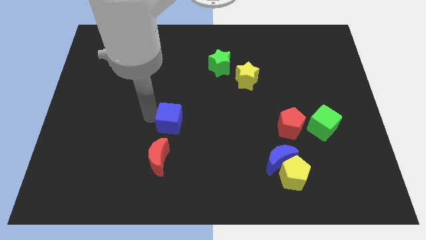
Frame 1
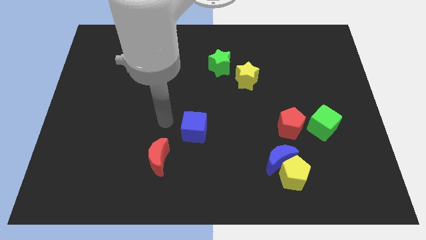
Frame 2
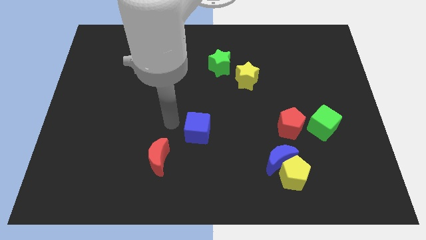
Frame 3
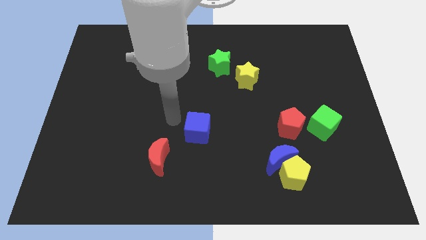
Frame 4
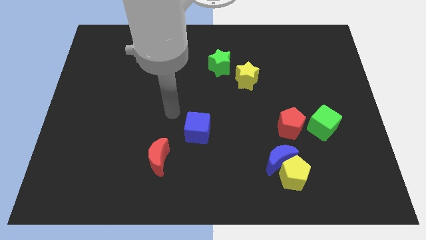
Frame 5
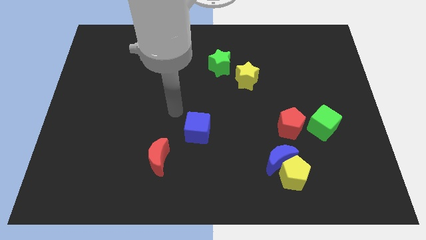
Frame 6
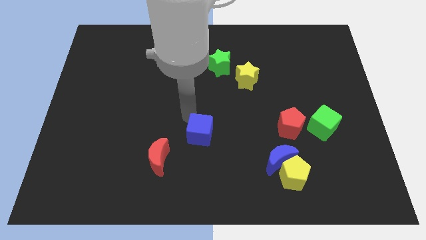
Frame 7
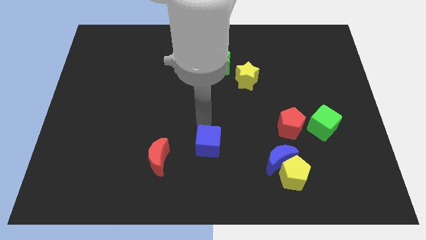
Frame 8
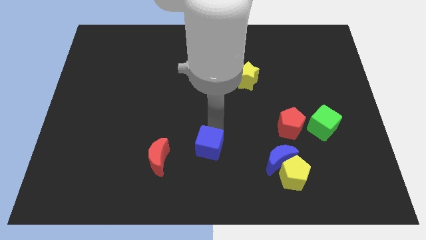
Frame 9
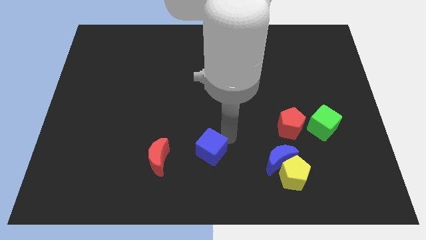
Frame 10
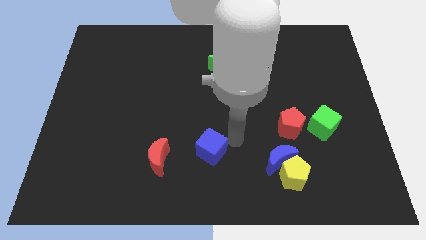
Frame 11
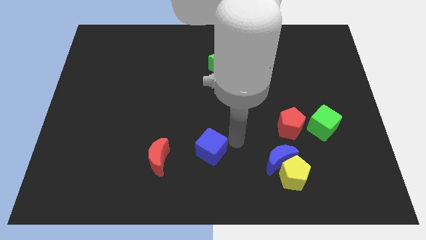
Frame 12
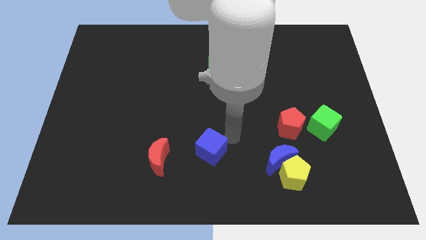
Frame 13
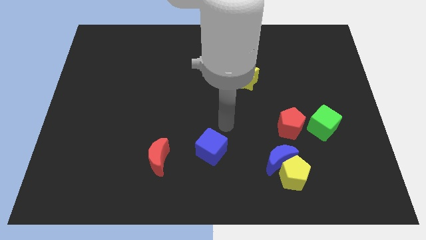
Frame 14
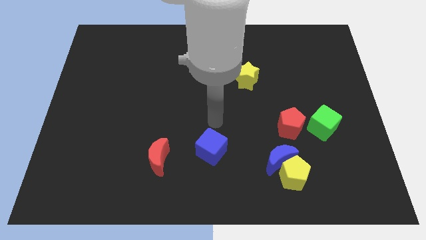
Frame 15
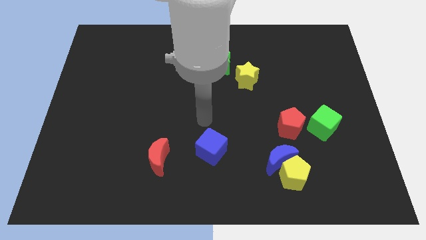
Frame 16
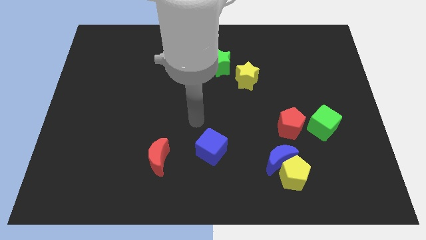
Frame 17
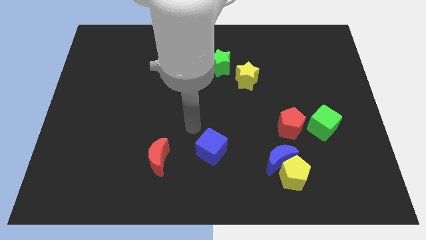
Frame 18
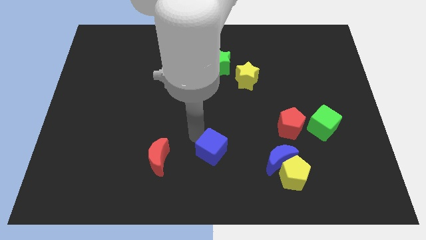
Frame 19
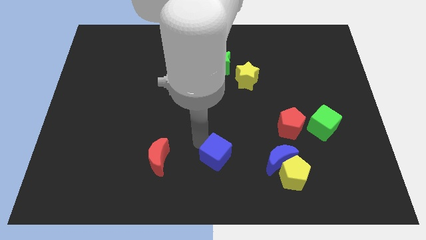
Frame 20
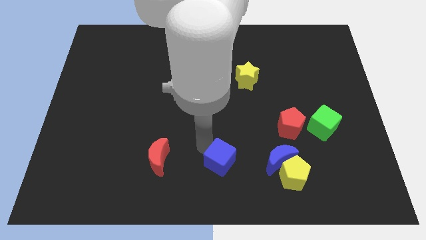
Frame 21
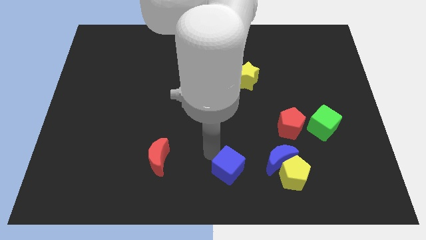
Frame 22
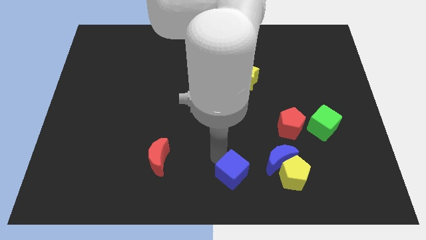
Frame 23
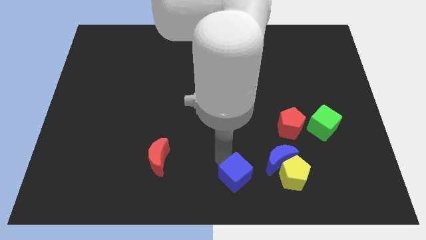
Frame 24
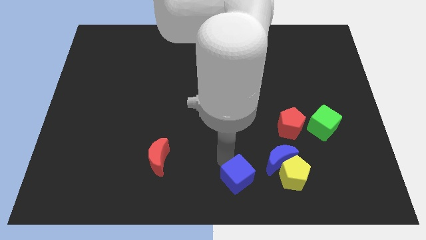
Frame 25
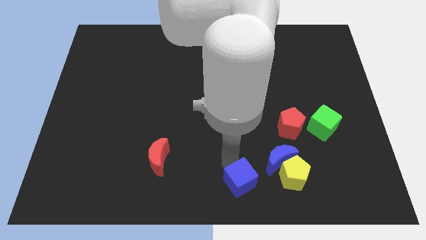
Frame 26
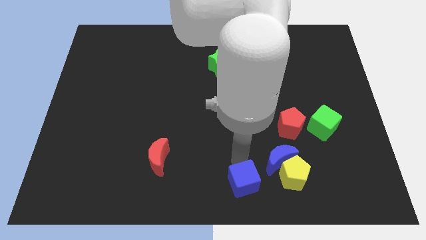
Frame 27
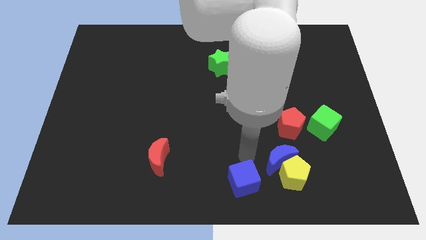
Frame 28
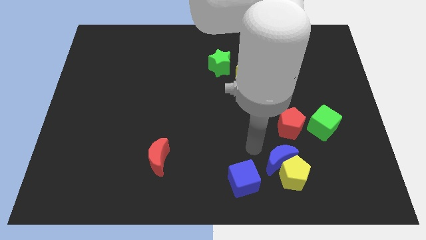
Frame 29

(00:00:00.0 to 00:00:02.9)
drag the blue cube slightly downwards

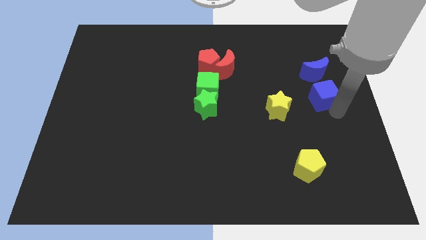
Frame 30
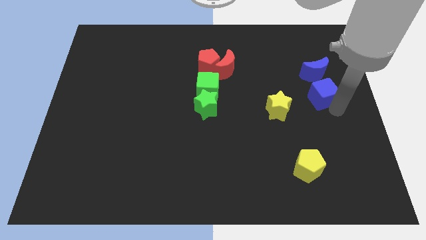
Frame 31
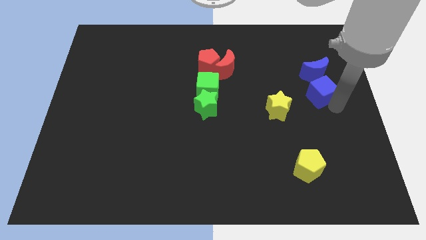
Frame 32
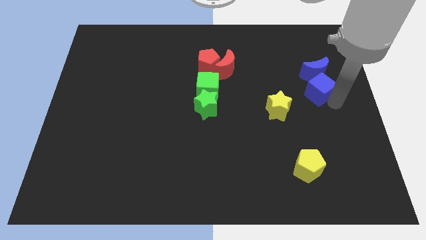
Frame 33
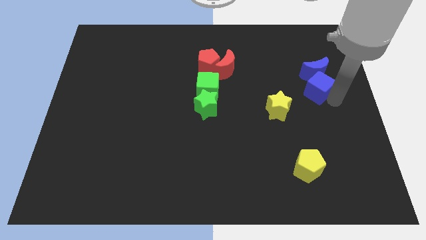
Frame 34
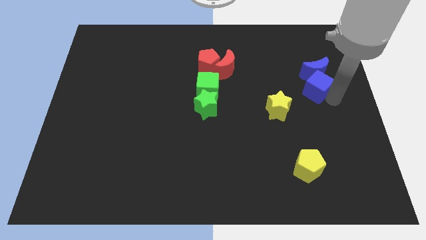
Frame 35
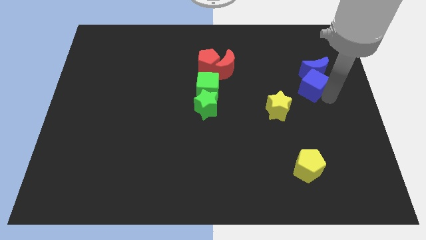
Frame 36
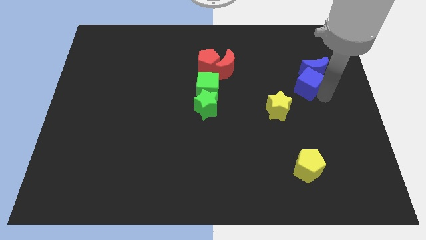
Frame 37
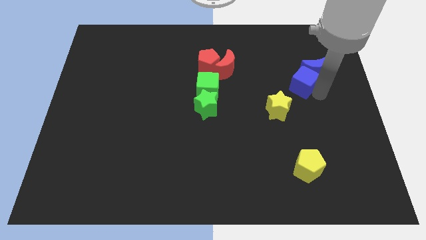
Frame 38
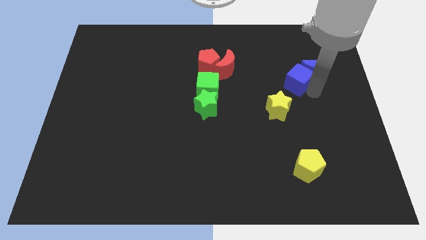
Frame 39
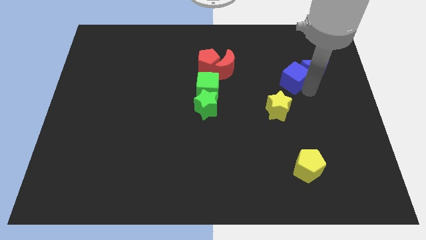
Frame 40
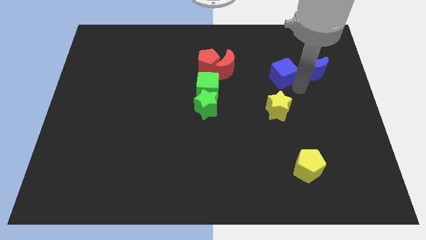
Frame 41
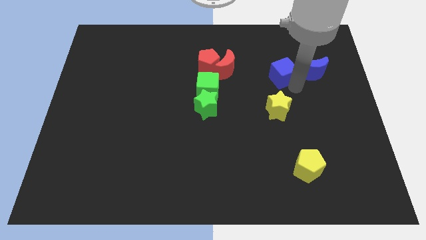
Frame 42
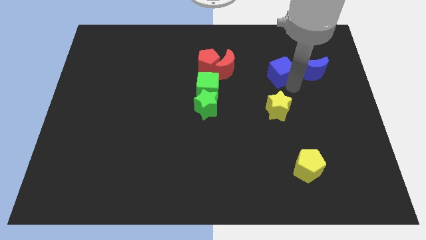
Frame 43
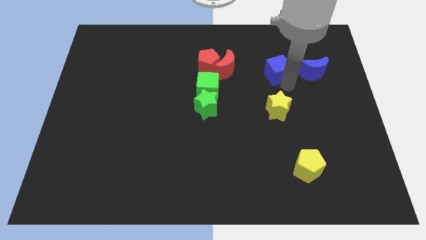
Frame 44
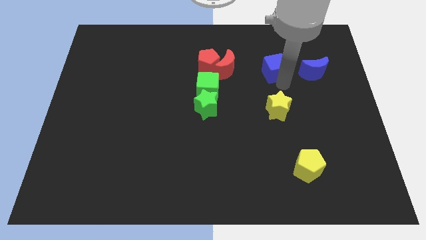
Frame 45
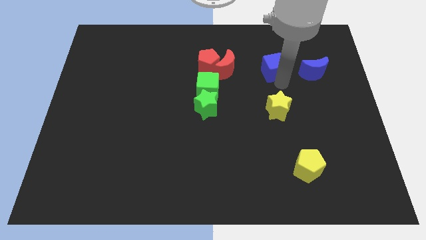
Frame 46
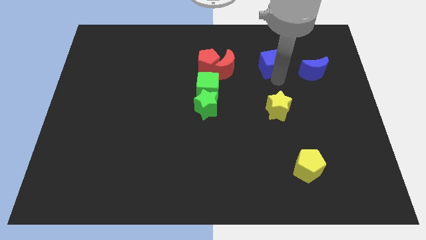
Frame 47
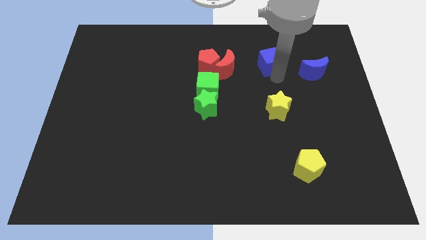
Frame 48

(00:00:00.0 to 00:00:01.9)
place the blue cube above the yellow star

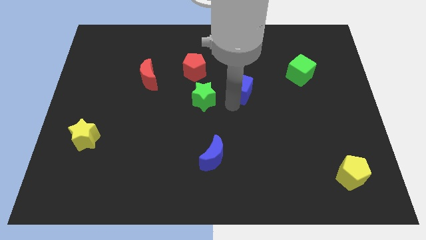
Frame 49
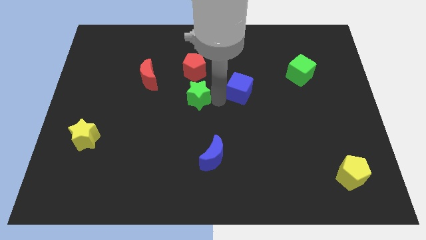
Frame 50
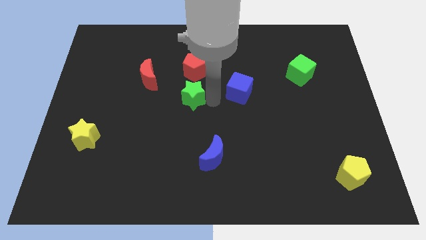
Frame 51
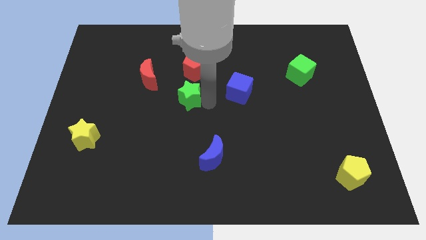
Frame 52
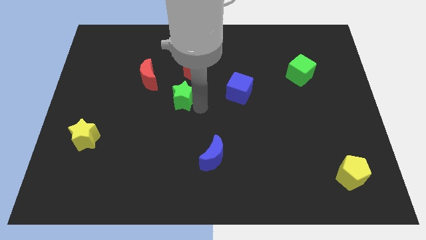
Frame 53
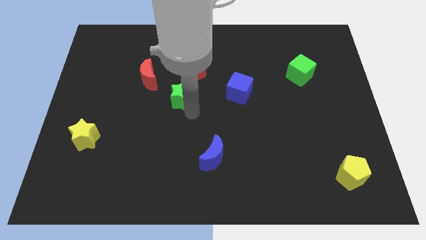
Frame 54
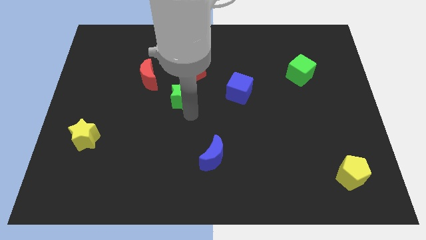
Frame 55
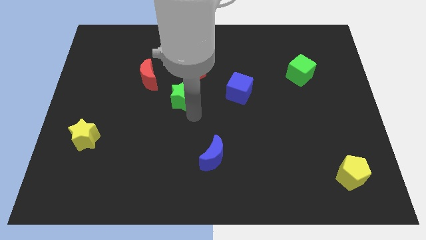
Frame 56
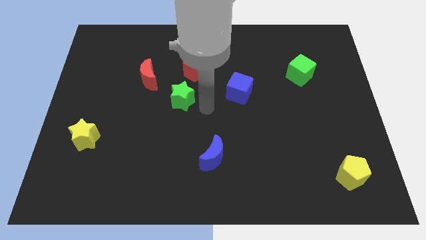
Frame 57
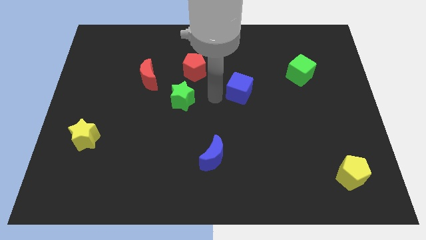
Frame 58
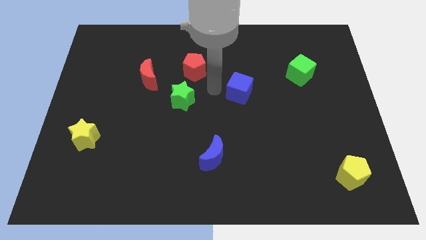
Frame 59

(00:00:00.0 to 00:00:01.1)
push green star slightly to the left

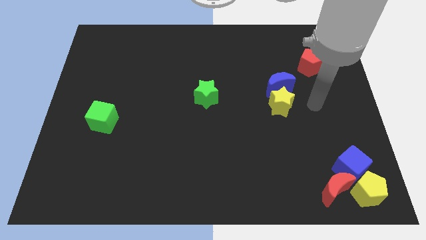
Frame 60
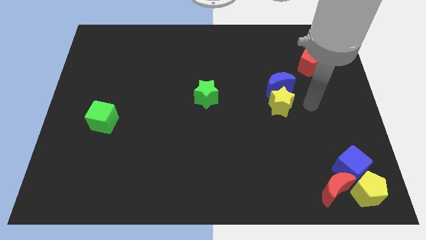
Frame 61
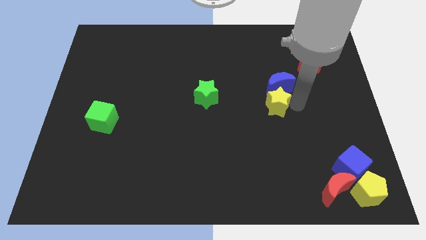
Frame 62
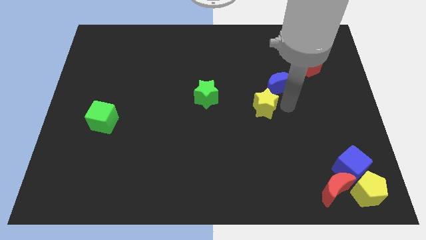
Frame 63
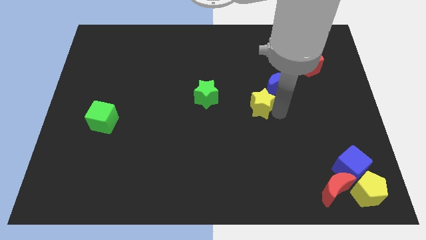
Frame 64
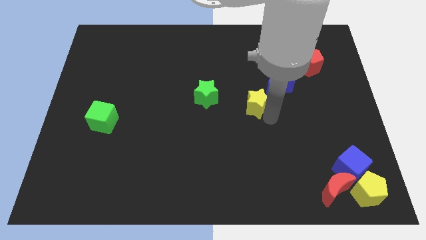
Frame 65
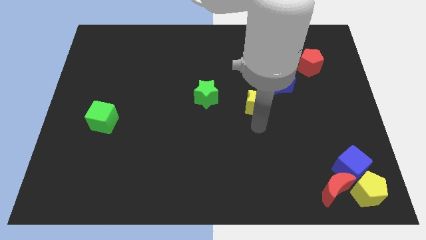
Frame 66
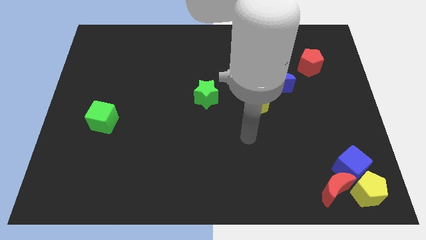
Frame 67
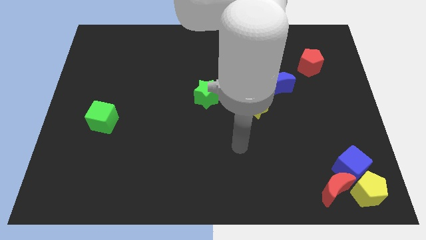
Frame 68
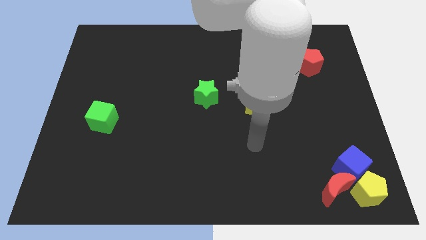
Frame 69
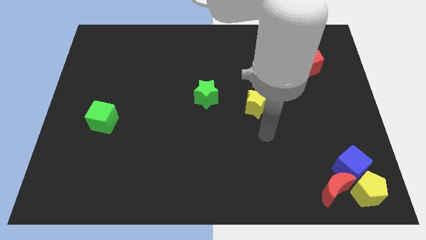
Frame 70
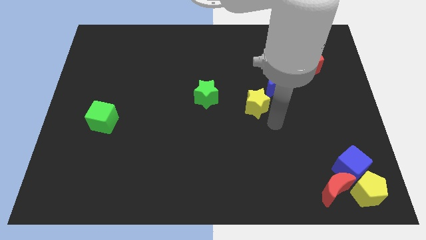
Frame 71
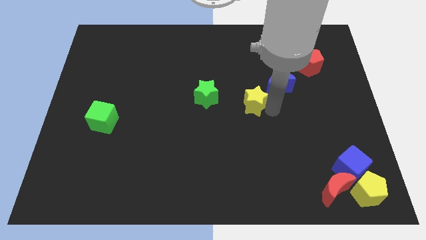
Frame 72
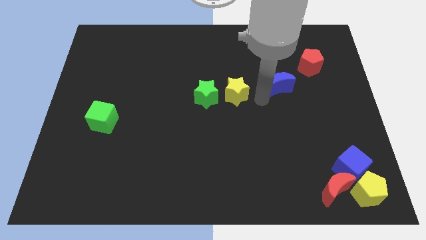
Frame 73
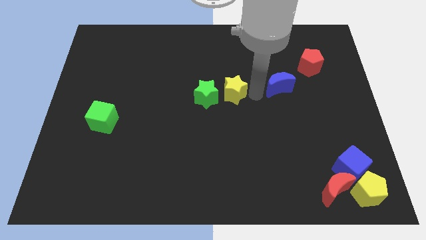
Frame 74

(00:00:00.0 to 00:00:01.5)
separate the yellow star from the blue moon

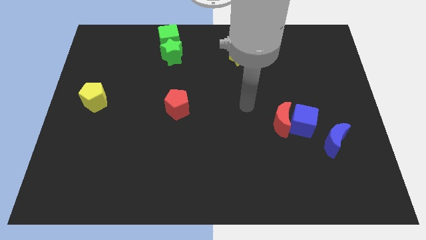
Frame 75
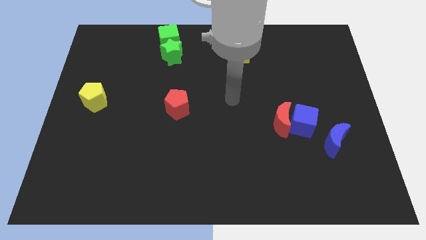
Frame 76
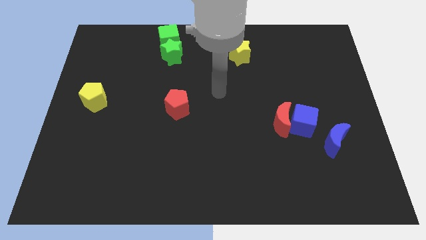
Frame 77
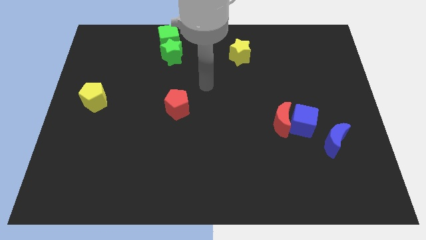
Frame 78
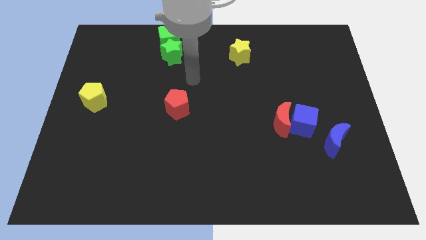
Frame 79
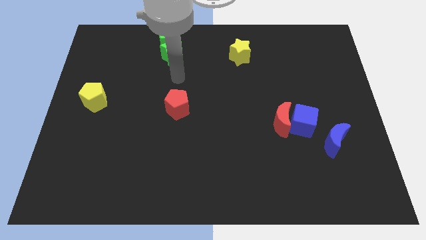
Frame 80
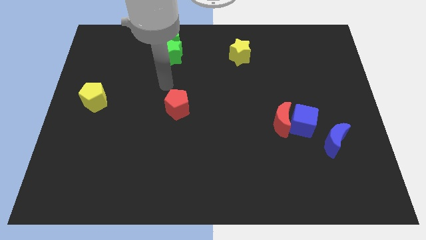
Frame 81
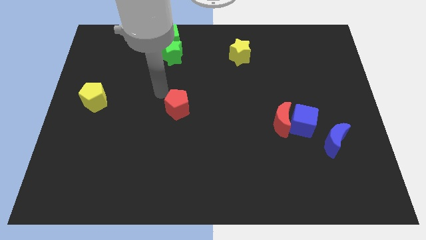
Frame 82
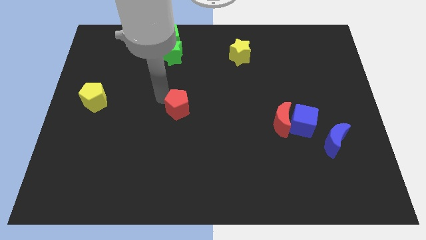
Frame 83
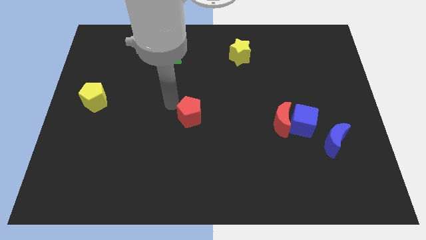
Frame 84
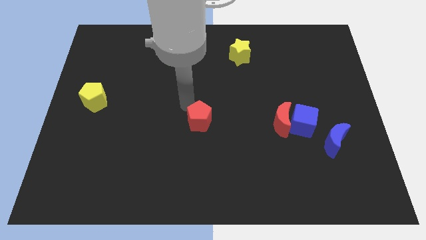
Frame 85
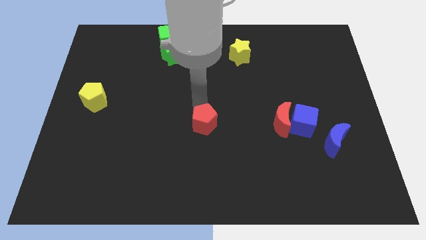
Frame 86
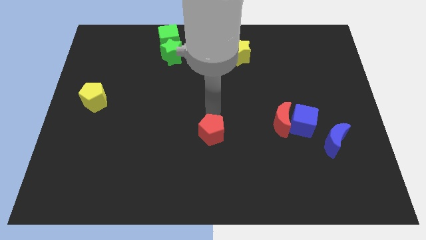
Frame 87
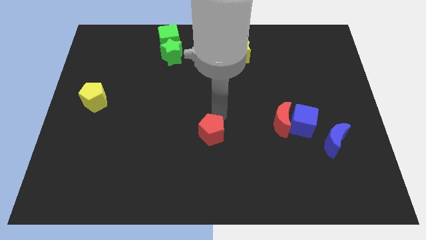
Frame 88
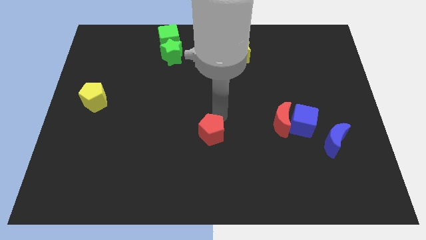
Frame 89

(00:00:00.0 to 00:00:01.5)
move the red pentagon to the center of the board
